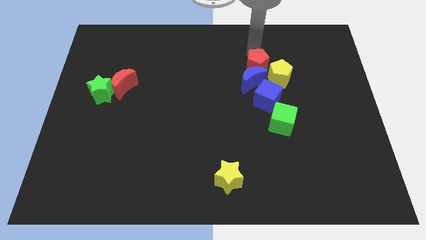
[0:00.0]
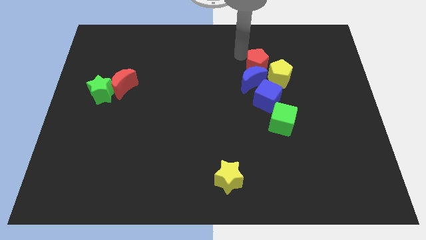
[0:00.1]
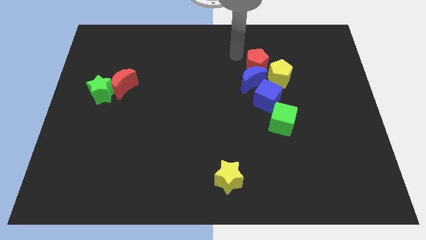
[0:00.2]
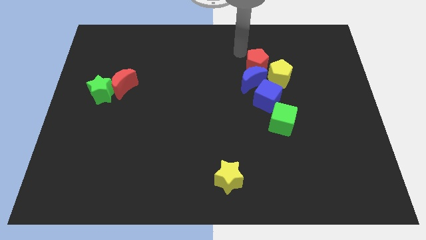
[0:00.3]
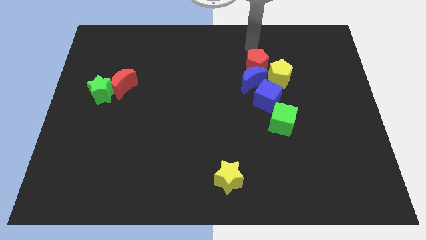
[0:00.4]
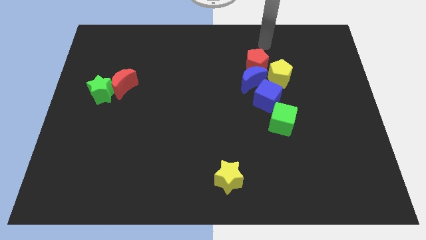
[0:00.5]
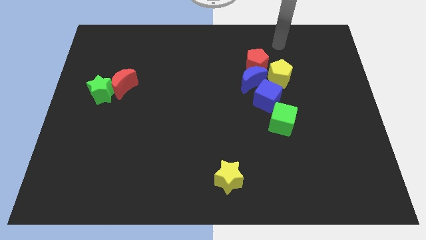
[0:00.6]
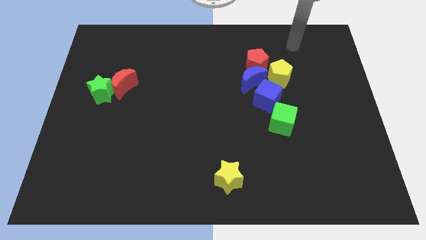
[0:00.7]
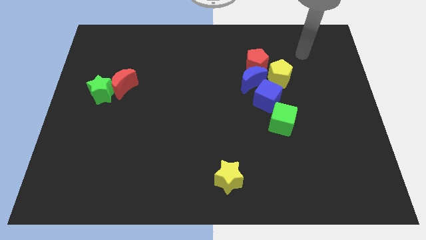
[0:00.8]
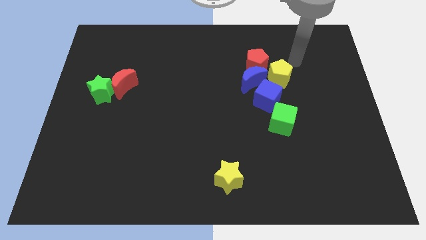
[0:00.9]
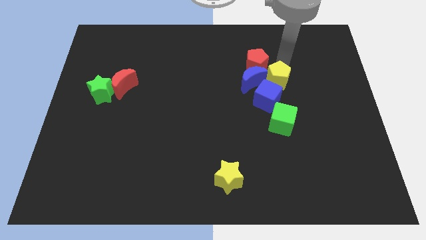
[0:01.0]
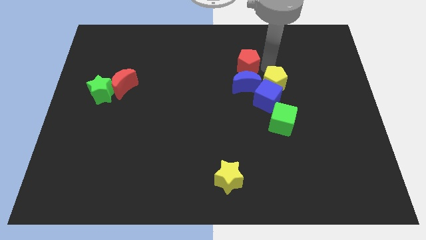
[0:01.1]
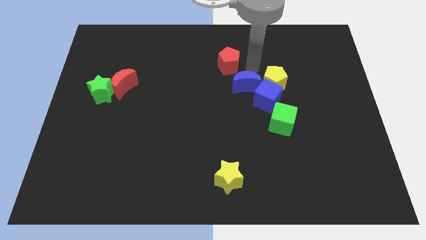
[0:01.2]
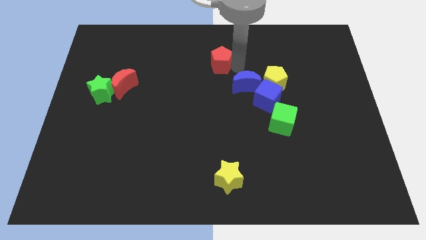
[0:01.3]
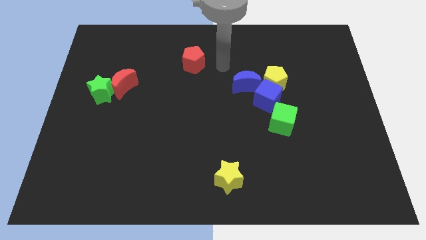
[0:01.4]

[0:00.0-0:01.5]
move the red pentagon to the top left of the blue crescent

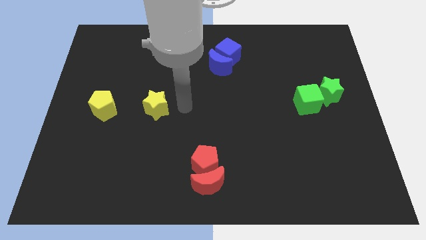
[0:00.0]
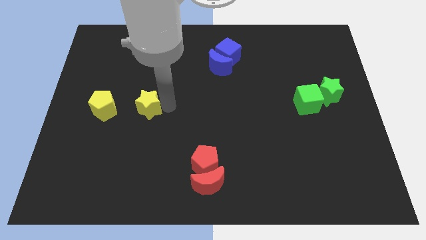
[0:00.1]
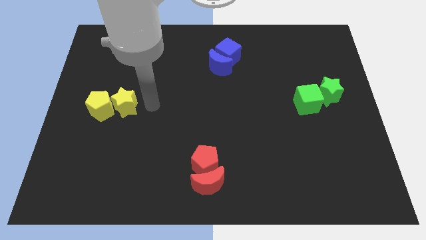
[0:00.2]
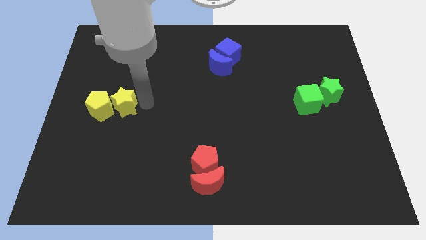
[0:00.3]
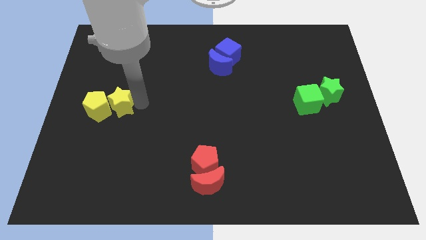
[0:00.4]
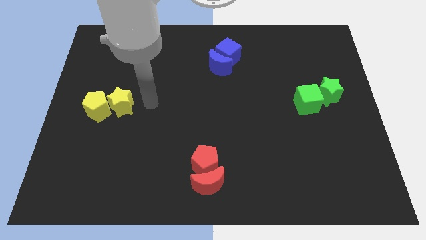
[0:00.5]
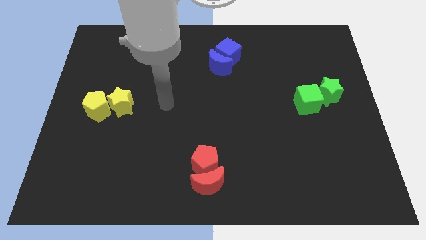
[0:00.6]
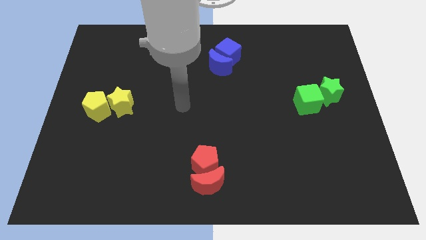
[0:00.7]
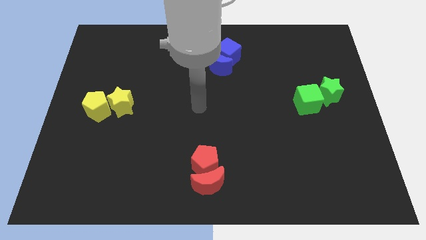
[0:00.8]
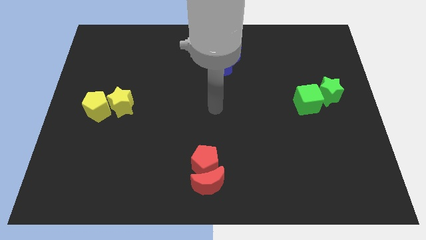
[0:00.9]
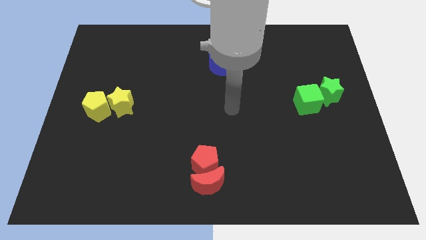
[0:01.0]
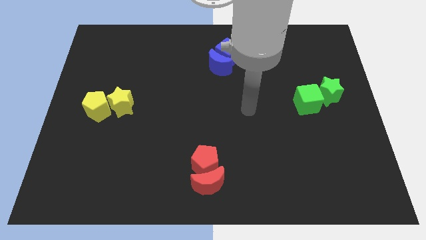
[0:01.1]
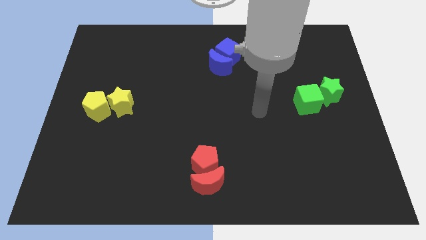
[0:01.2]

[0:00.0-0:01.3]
move the yellow star into the yellow pentagon

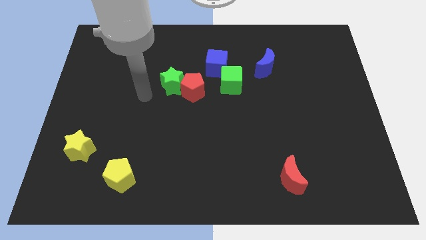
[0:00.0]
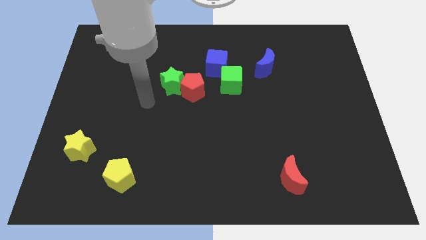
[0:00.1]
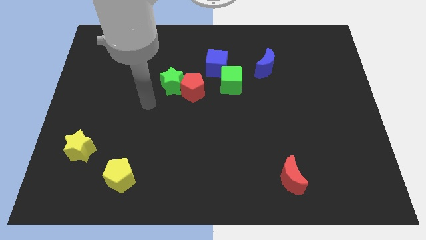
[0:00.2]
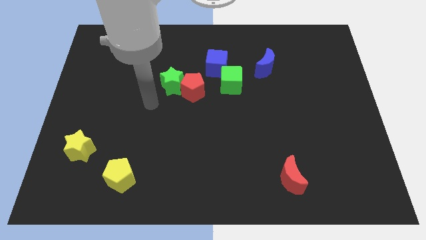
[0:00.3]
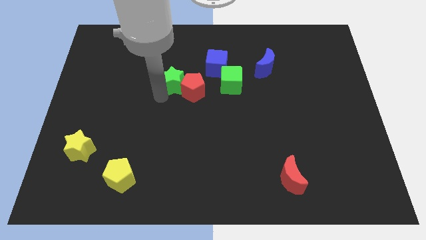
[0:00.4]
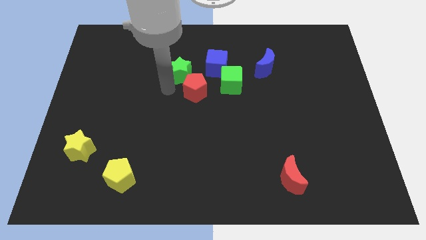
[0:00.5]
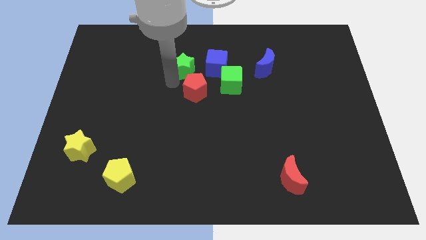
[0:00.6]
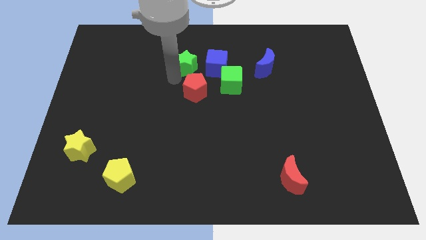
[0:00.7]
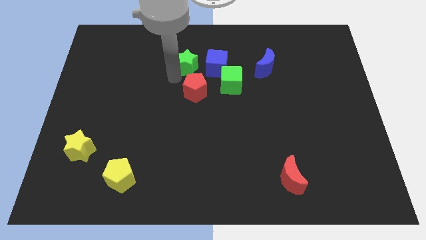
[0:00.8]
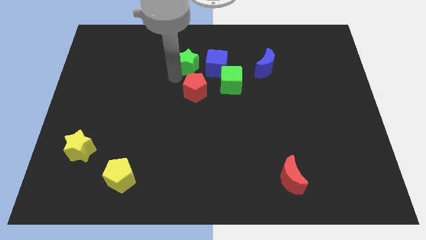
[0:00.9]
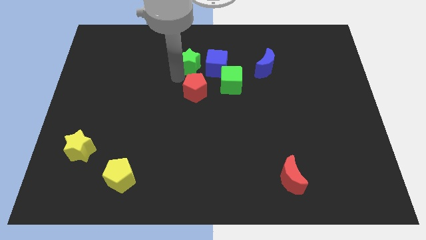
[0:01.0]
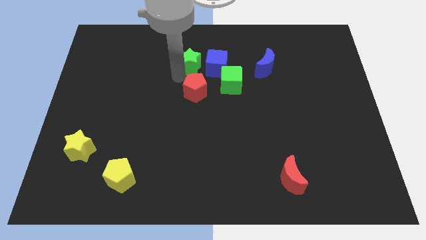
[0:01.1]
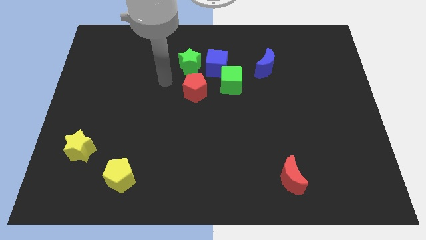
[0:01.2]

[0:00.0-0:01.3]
place the green star on the top of red pentagon

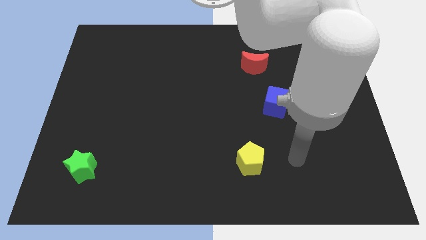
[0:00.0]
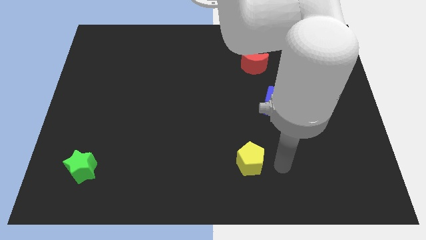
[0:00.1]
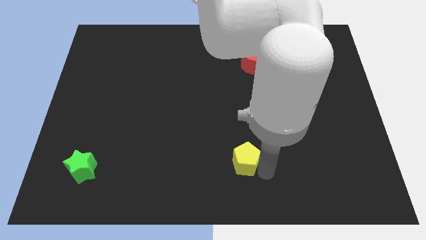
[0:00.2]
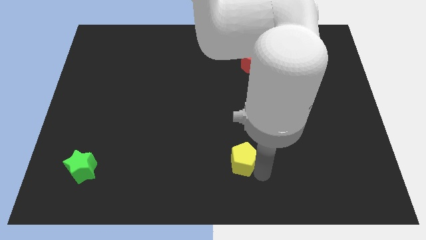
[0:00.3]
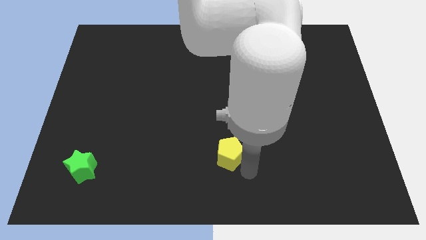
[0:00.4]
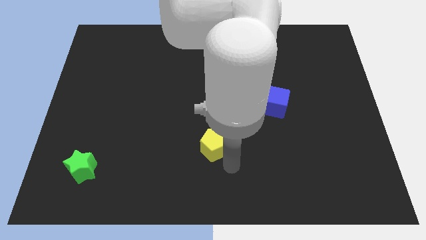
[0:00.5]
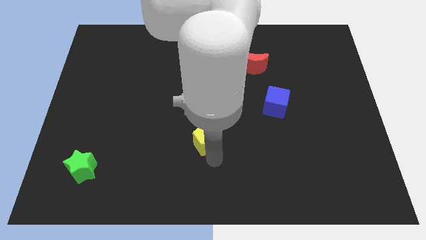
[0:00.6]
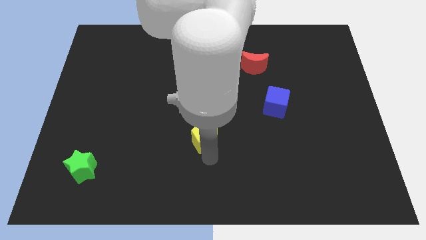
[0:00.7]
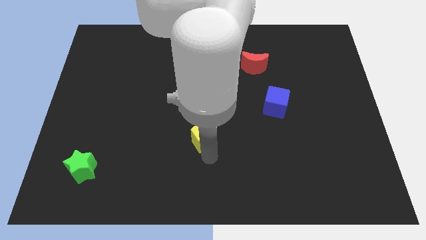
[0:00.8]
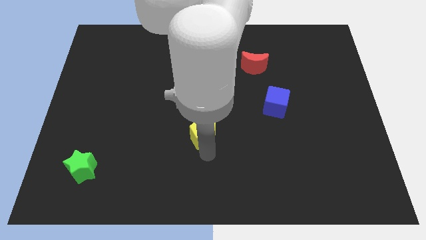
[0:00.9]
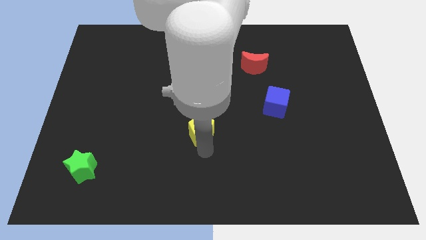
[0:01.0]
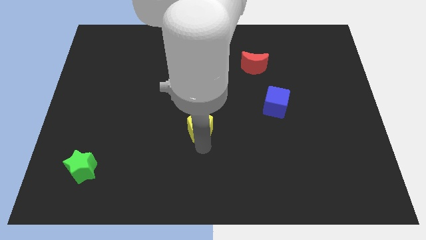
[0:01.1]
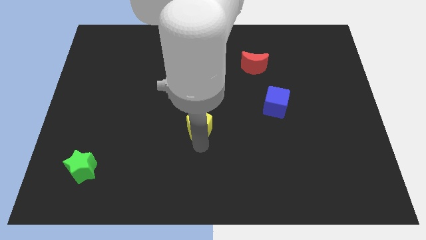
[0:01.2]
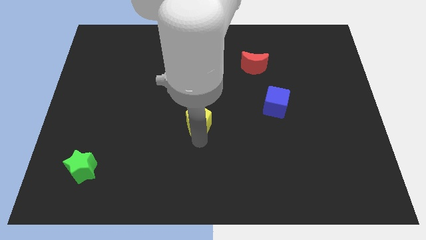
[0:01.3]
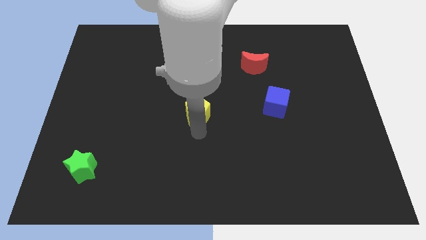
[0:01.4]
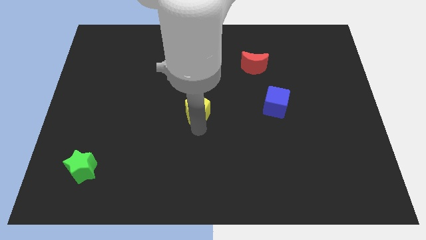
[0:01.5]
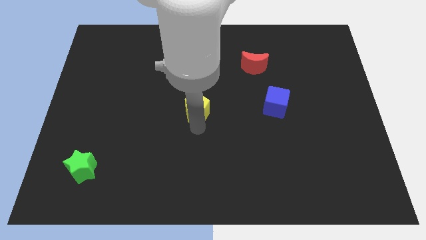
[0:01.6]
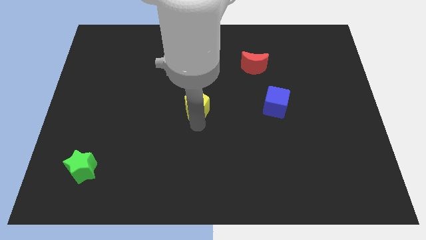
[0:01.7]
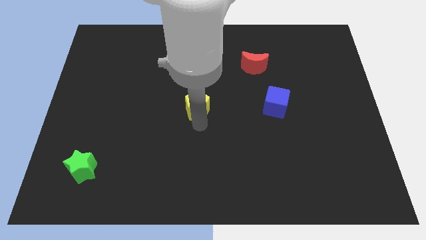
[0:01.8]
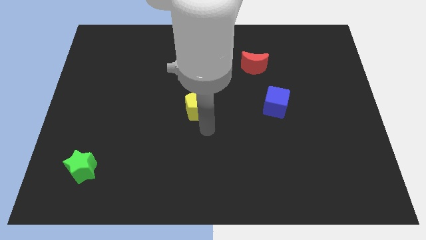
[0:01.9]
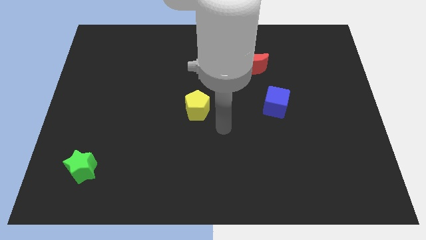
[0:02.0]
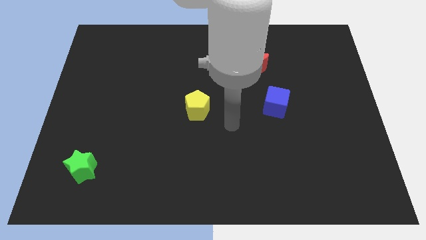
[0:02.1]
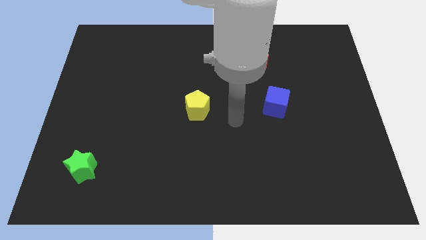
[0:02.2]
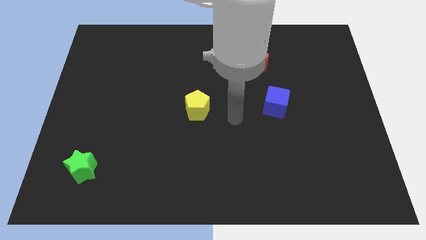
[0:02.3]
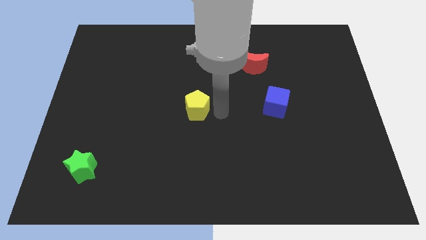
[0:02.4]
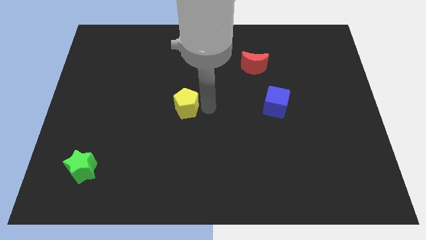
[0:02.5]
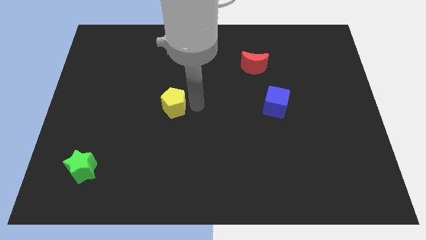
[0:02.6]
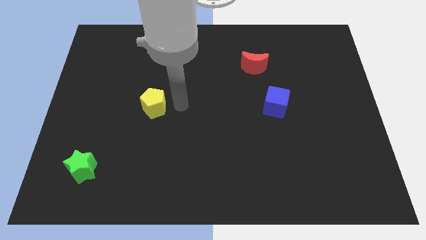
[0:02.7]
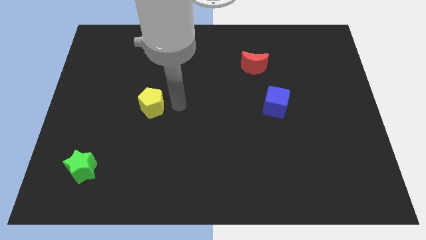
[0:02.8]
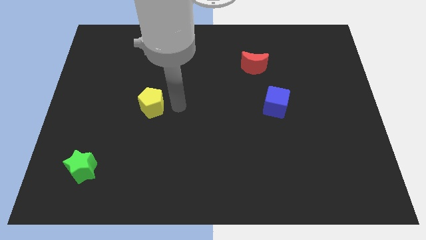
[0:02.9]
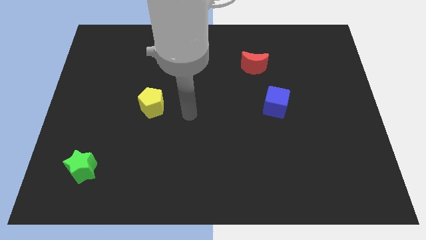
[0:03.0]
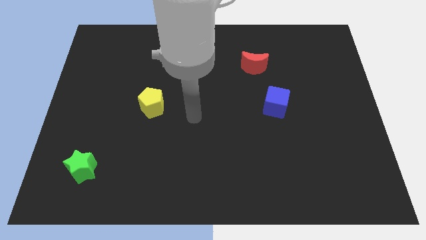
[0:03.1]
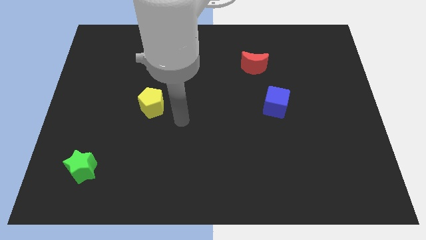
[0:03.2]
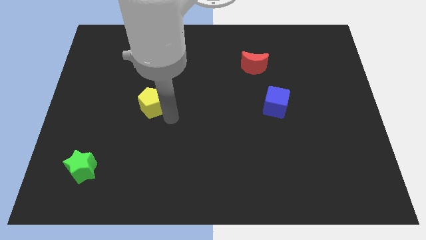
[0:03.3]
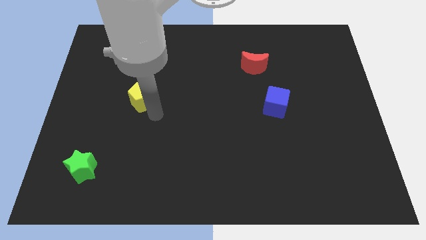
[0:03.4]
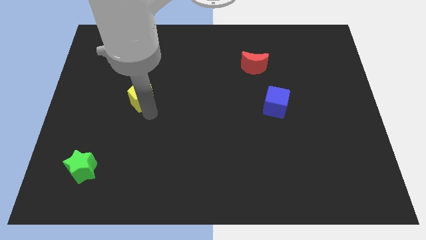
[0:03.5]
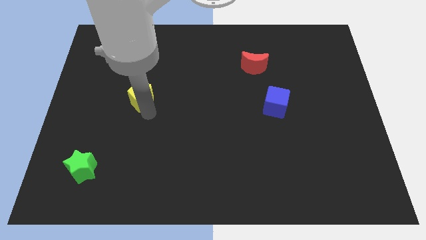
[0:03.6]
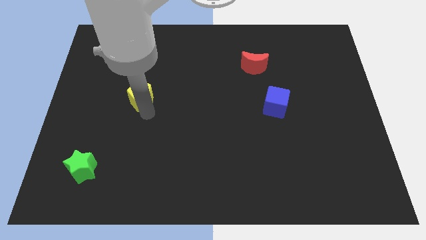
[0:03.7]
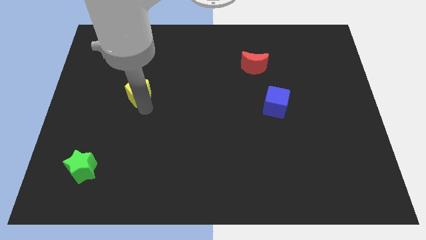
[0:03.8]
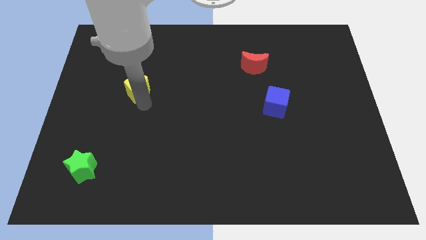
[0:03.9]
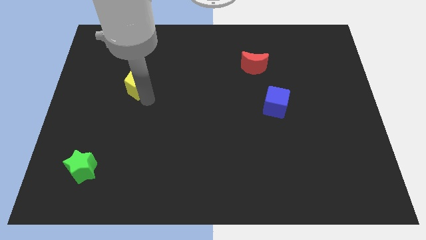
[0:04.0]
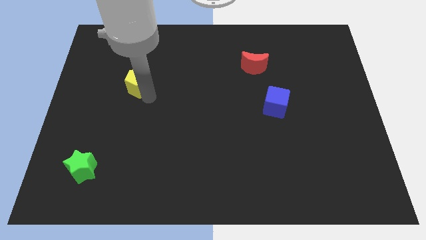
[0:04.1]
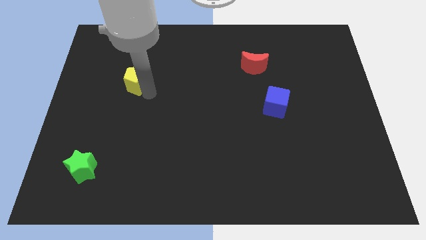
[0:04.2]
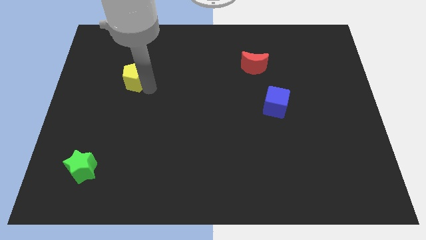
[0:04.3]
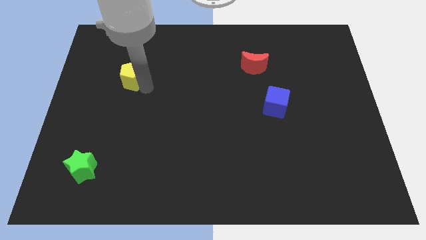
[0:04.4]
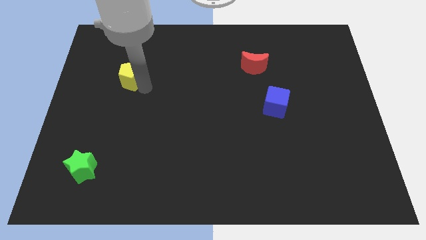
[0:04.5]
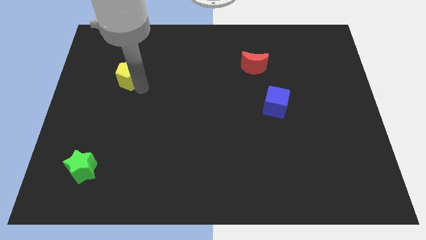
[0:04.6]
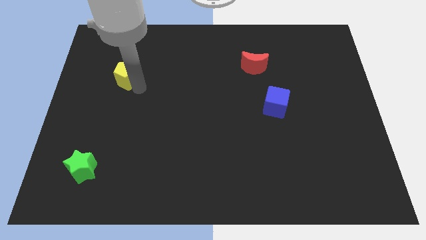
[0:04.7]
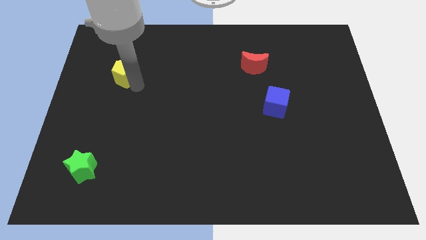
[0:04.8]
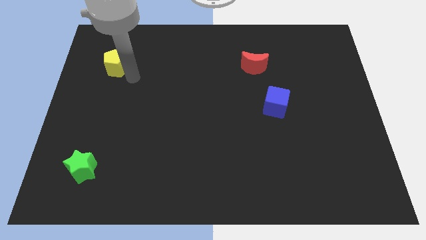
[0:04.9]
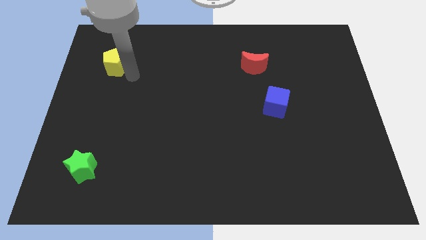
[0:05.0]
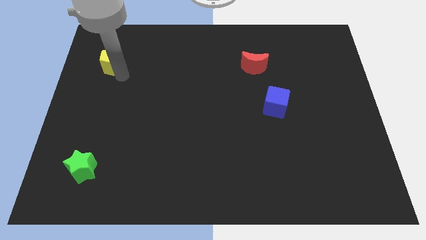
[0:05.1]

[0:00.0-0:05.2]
push the yellow pentagon slightly up
